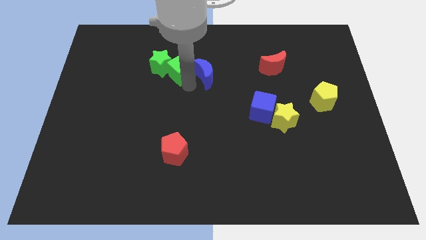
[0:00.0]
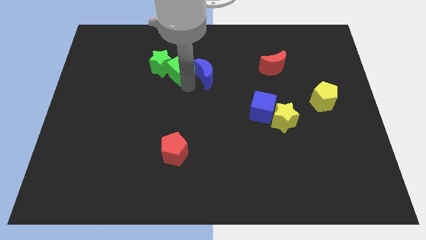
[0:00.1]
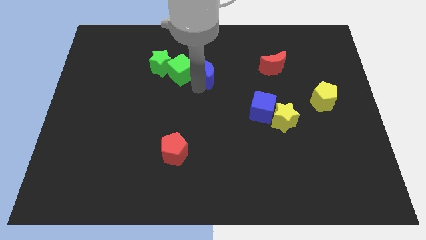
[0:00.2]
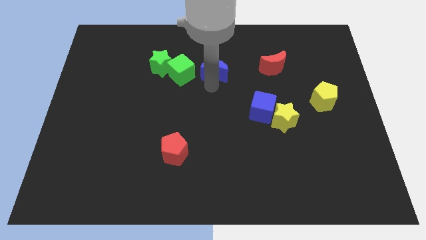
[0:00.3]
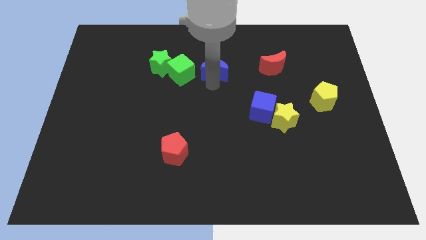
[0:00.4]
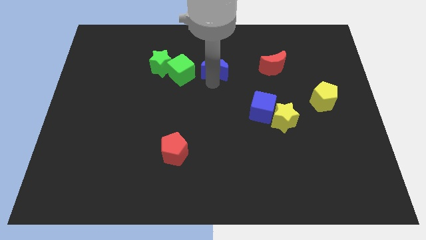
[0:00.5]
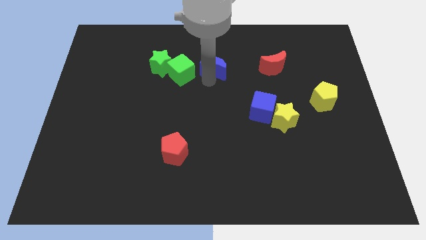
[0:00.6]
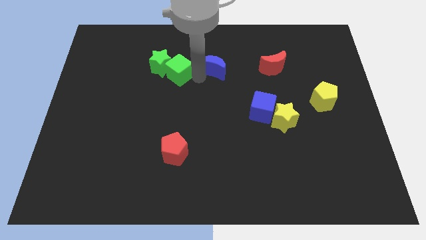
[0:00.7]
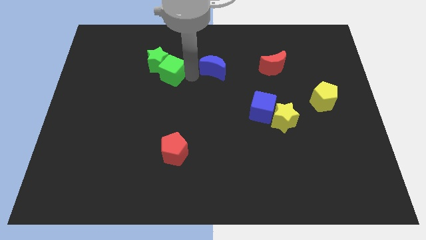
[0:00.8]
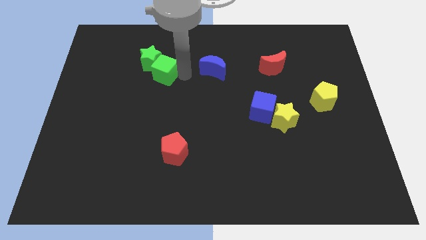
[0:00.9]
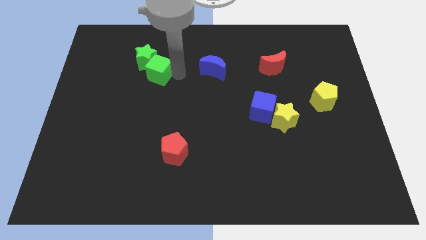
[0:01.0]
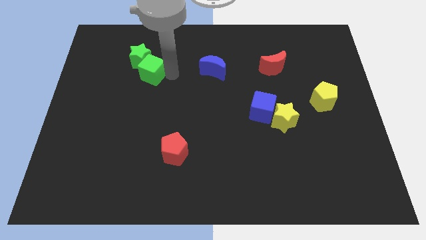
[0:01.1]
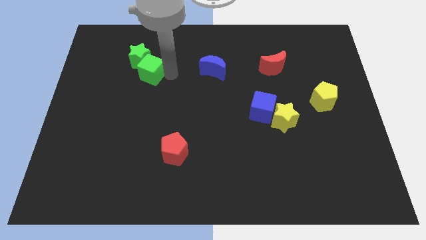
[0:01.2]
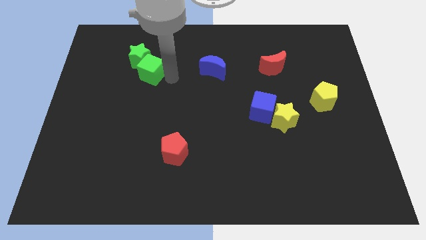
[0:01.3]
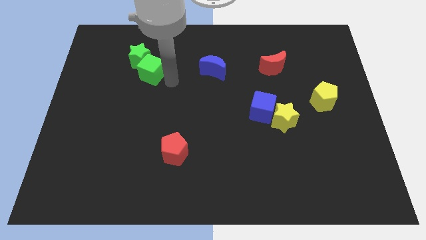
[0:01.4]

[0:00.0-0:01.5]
place the green blocks parallel to the blue crescent

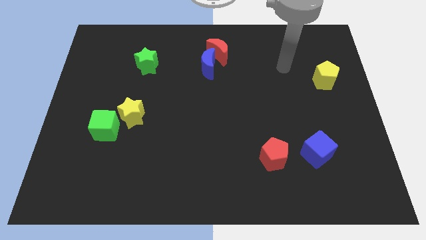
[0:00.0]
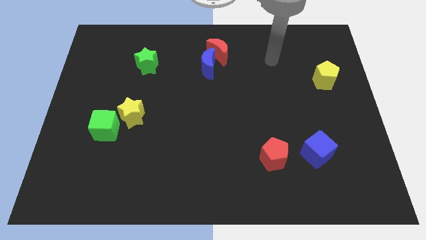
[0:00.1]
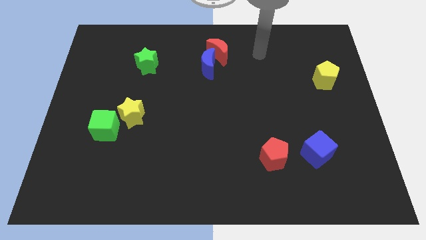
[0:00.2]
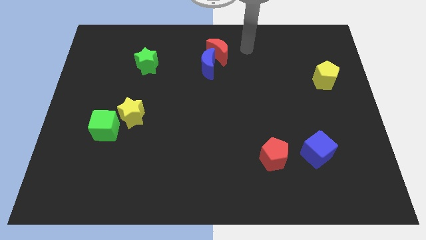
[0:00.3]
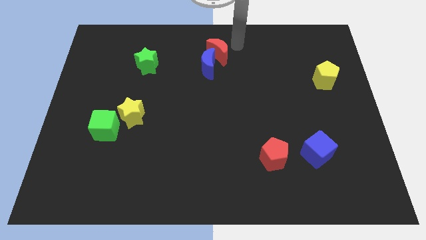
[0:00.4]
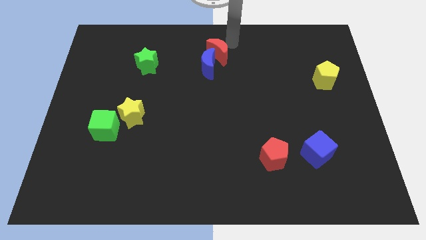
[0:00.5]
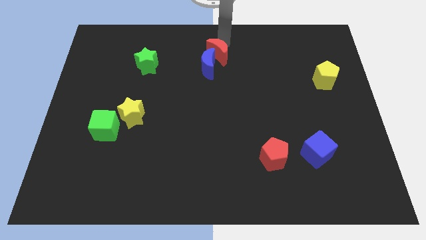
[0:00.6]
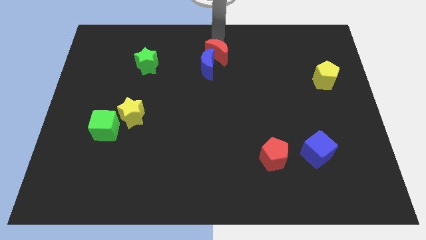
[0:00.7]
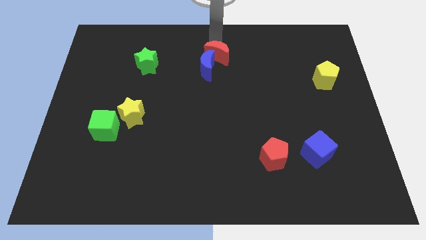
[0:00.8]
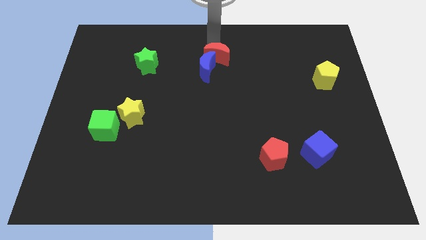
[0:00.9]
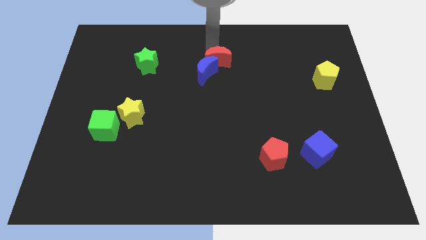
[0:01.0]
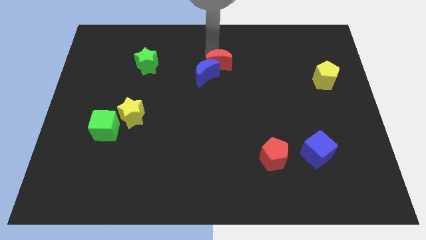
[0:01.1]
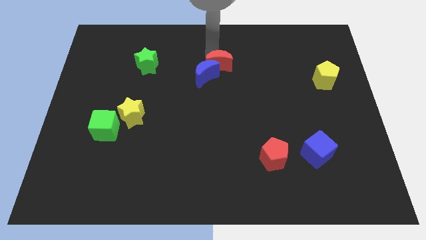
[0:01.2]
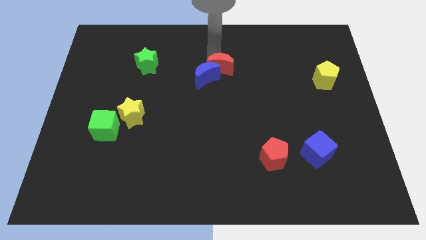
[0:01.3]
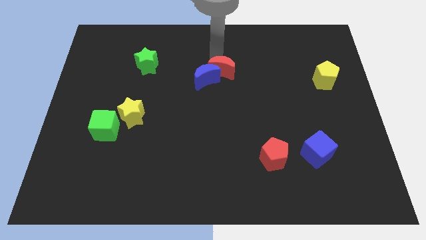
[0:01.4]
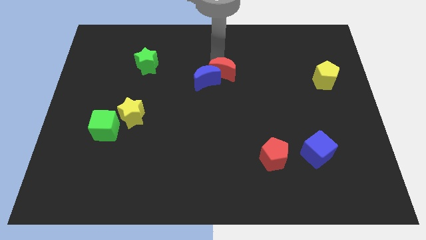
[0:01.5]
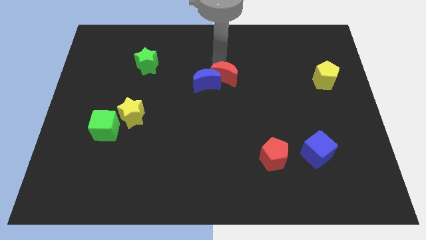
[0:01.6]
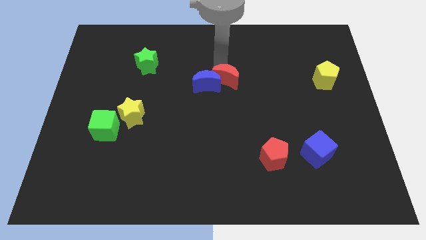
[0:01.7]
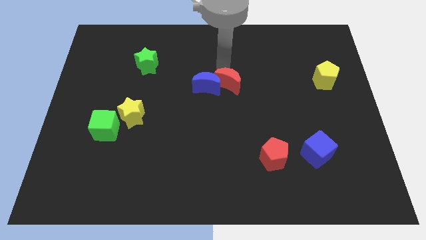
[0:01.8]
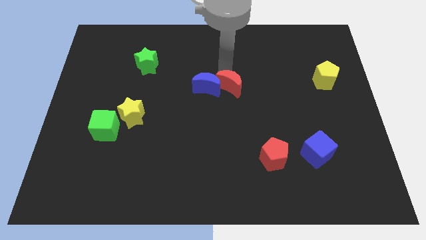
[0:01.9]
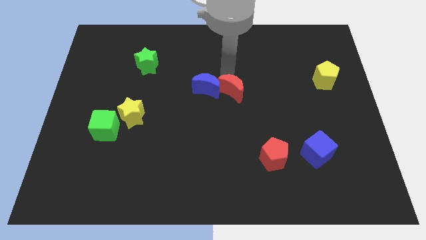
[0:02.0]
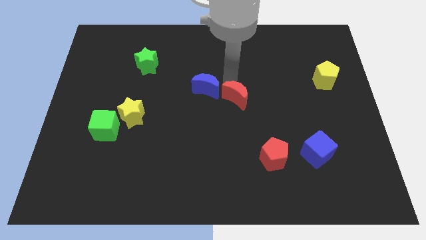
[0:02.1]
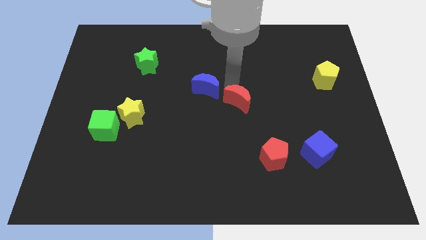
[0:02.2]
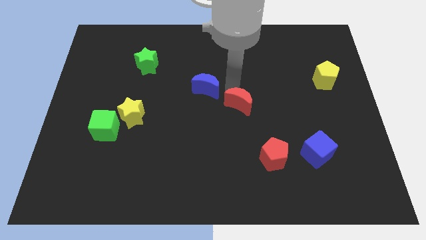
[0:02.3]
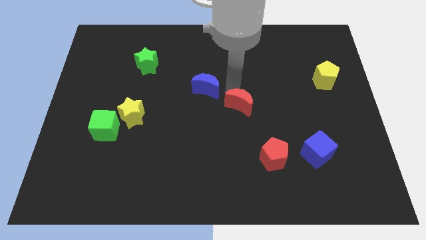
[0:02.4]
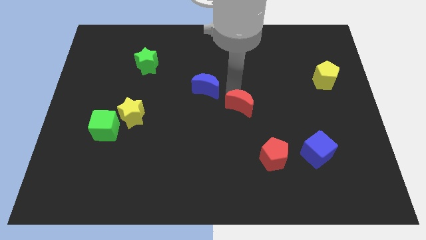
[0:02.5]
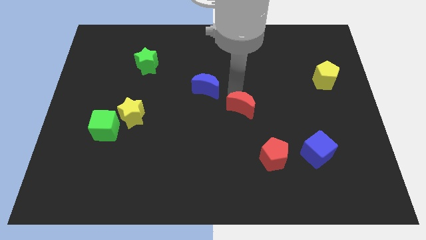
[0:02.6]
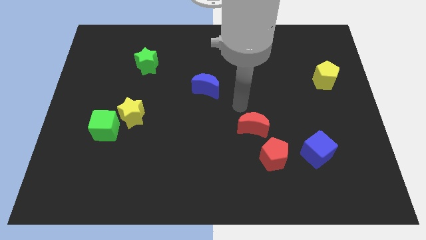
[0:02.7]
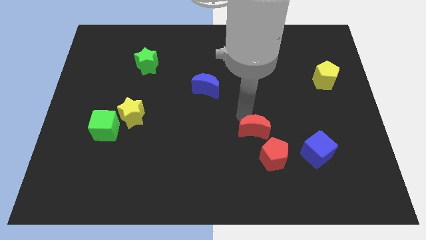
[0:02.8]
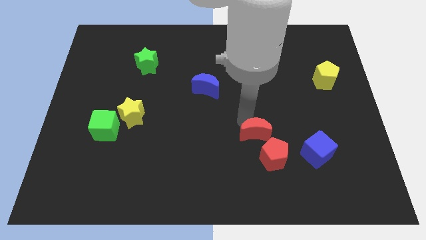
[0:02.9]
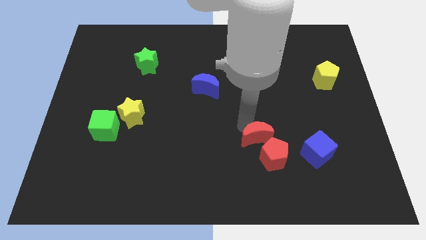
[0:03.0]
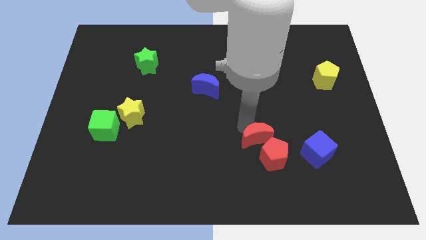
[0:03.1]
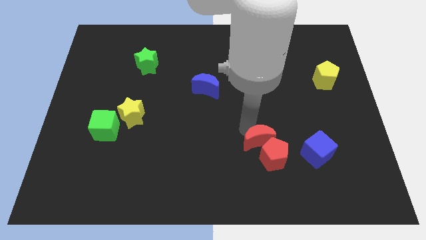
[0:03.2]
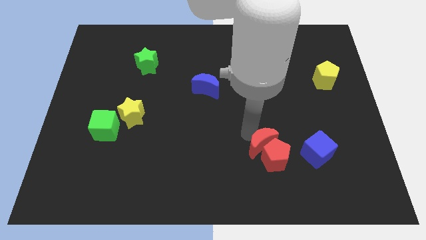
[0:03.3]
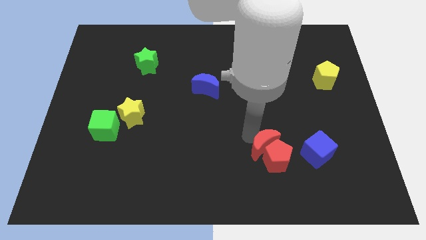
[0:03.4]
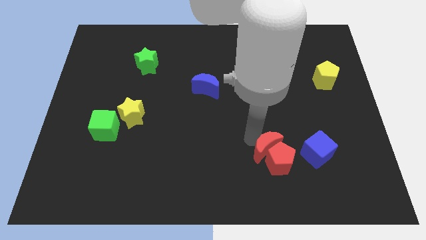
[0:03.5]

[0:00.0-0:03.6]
move the red crescent into the red pentagon

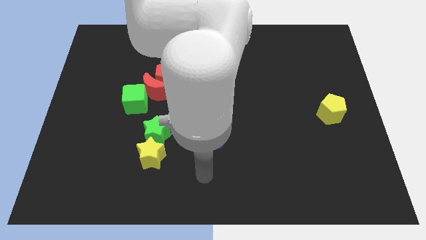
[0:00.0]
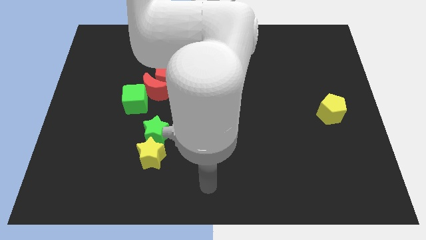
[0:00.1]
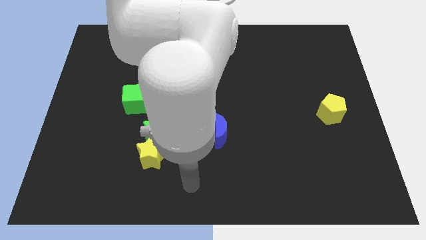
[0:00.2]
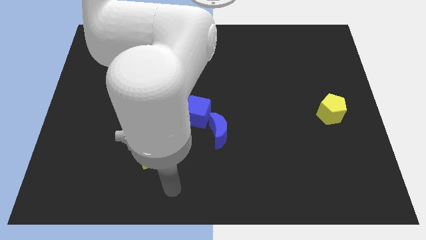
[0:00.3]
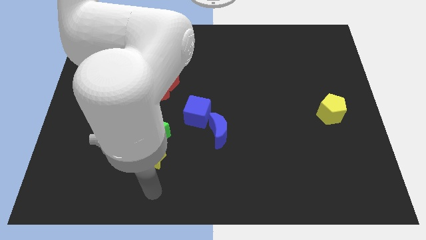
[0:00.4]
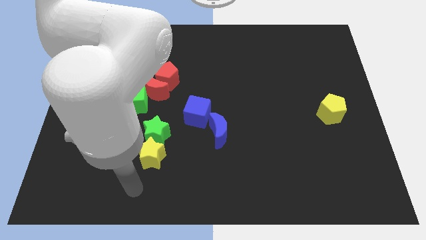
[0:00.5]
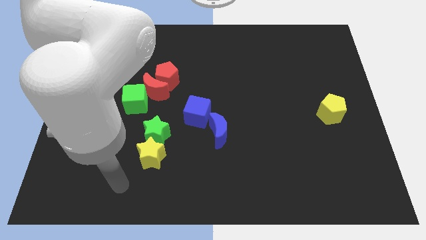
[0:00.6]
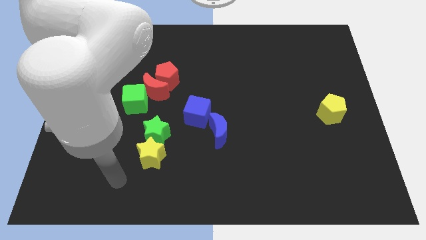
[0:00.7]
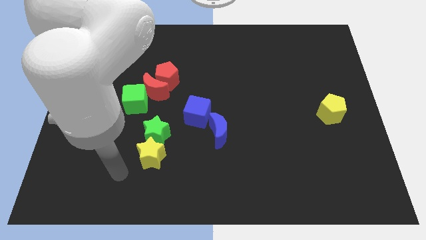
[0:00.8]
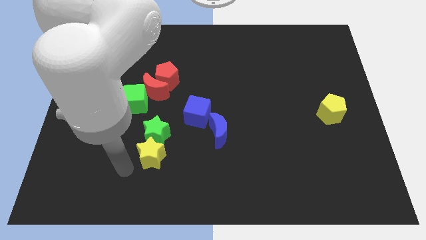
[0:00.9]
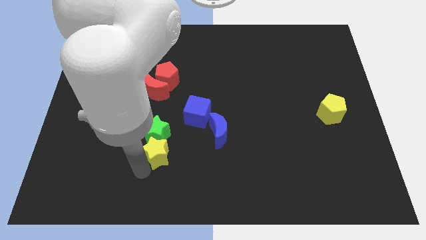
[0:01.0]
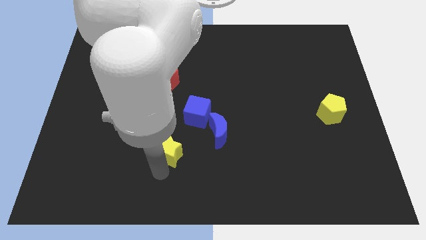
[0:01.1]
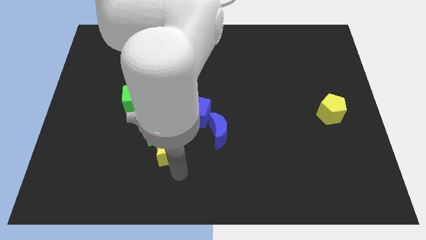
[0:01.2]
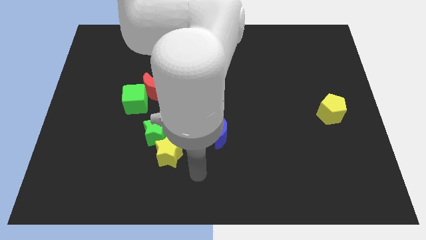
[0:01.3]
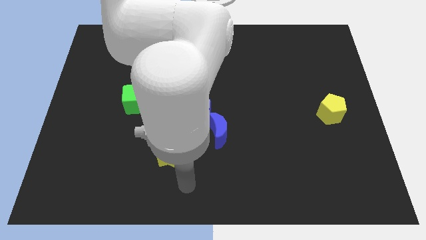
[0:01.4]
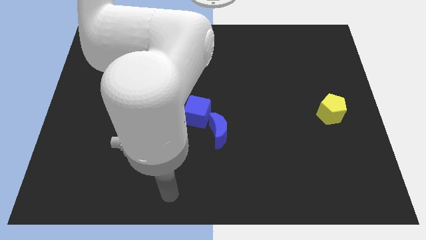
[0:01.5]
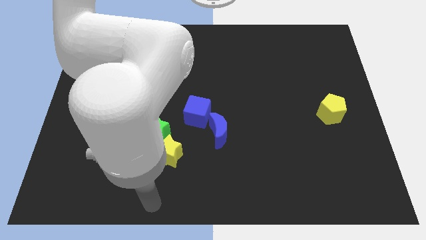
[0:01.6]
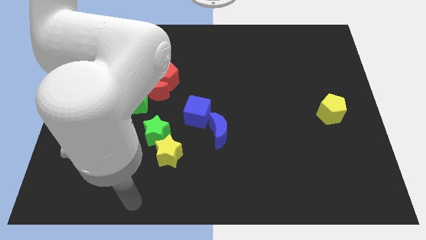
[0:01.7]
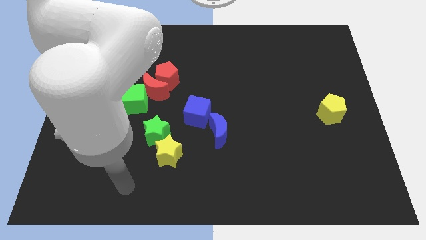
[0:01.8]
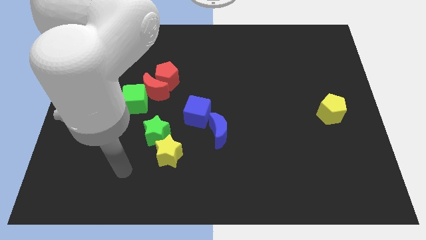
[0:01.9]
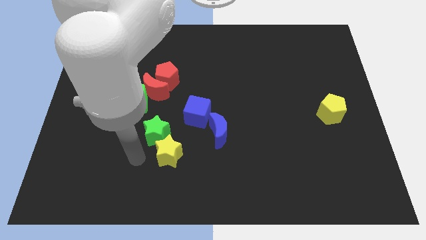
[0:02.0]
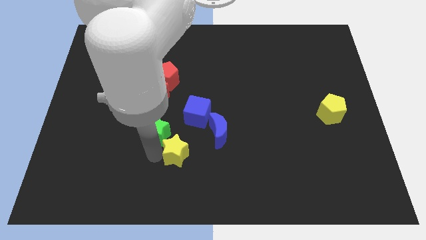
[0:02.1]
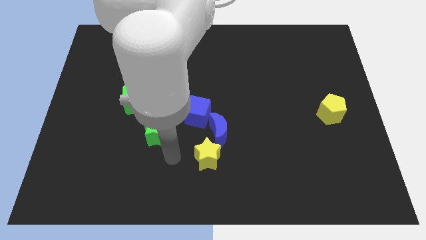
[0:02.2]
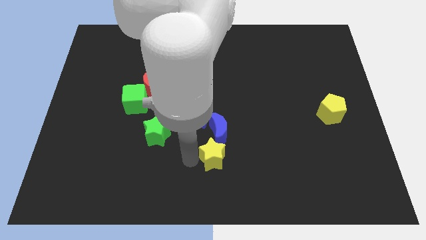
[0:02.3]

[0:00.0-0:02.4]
move the yellow star to the bottom of the blue crescent

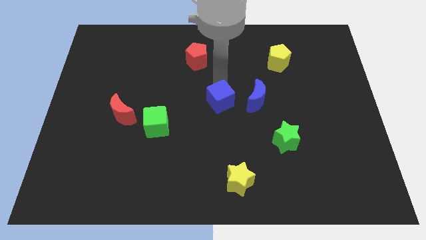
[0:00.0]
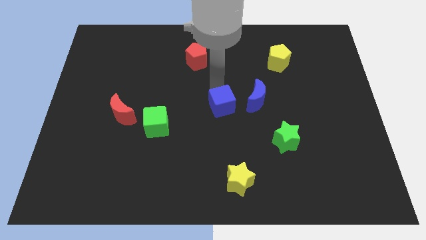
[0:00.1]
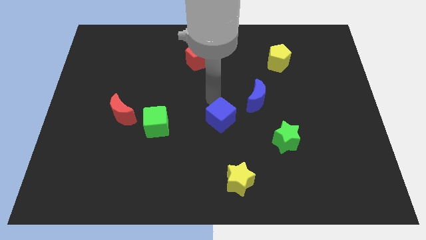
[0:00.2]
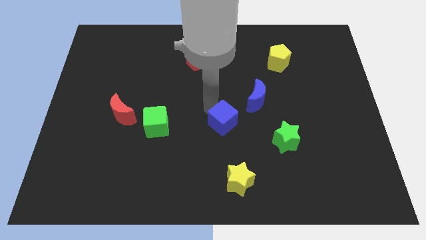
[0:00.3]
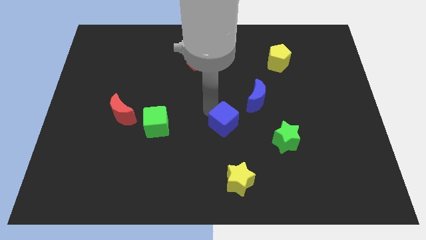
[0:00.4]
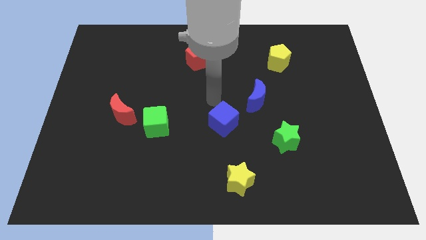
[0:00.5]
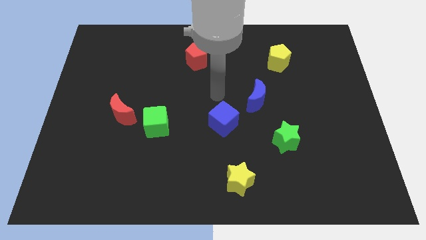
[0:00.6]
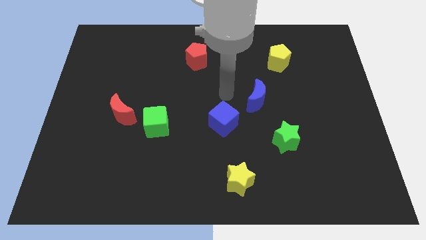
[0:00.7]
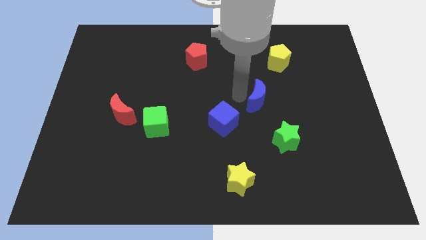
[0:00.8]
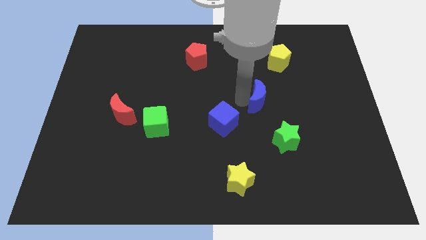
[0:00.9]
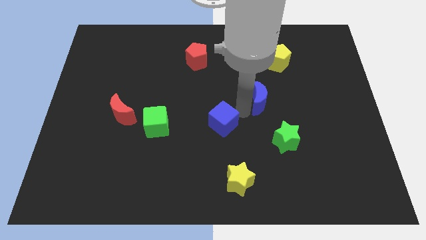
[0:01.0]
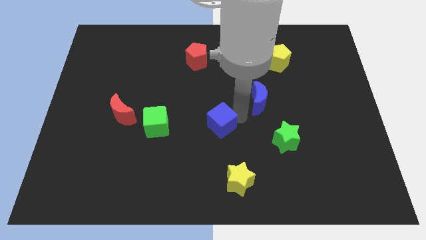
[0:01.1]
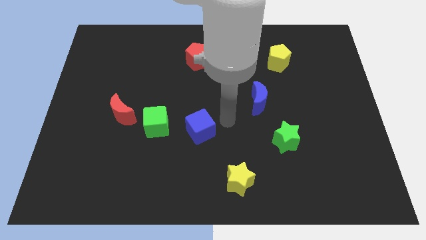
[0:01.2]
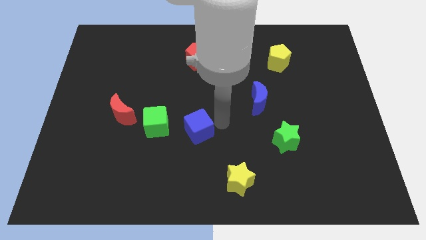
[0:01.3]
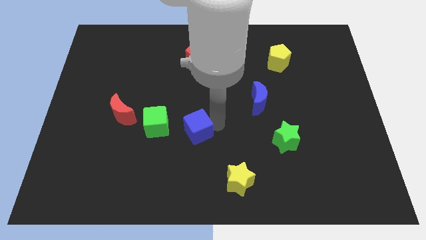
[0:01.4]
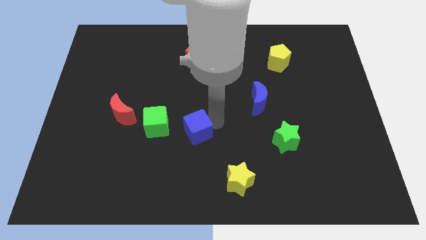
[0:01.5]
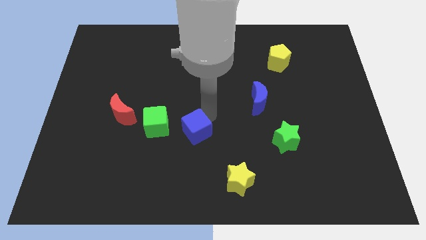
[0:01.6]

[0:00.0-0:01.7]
push the blue cube to the right of the green cube
